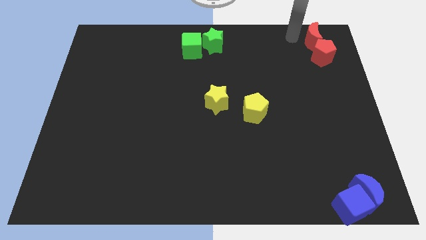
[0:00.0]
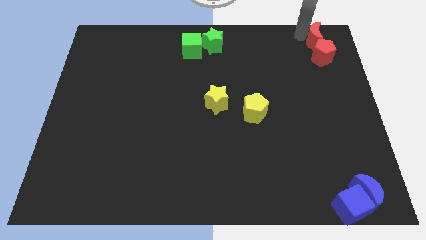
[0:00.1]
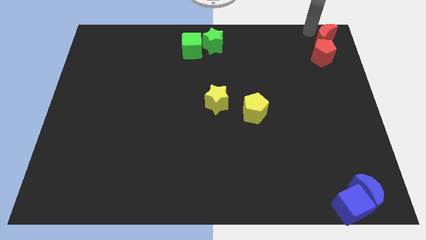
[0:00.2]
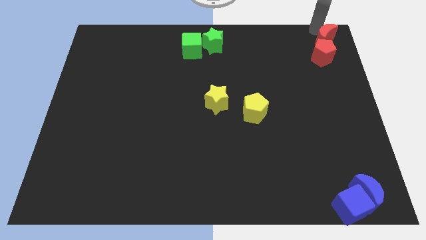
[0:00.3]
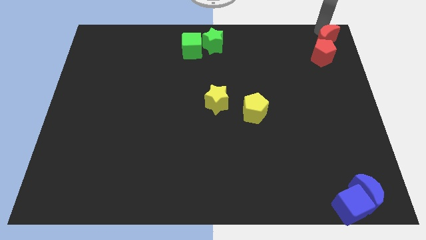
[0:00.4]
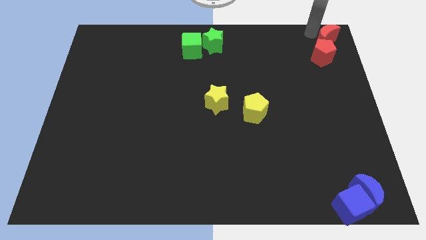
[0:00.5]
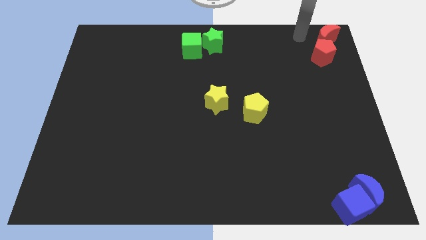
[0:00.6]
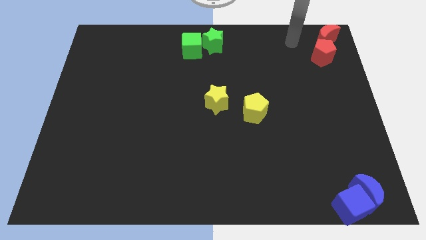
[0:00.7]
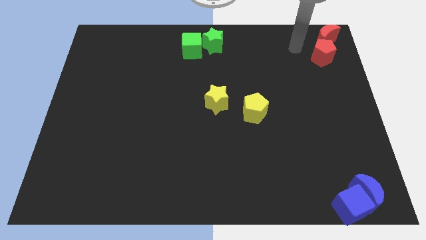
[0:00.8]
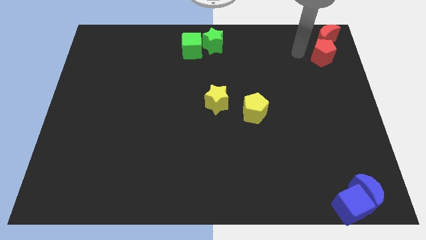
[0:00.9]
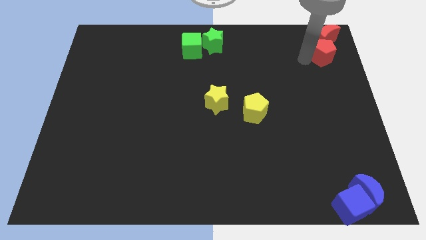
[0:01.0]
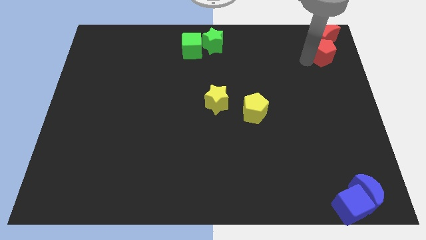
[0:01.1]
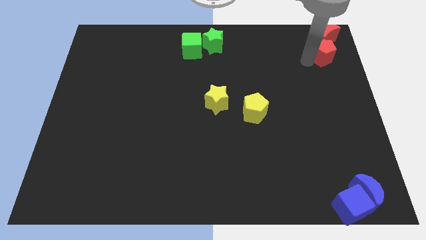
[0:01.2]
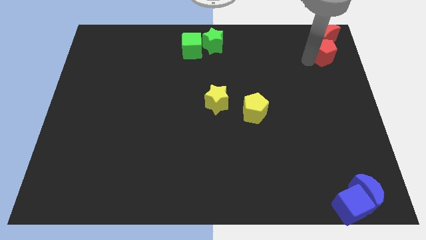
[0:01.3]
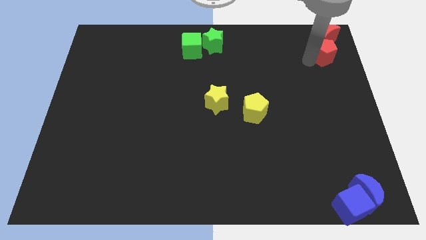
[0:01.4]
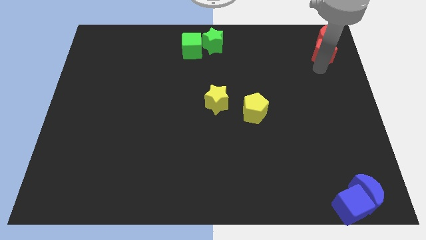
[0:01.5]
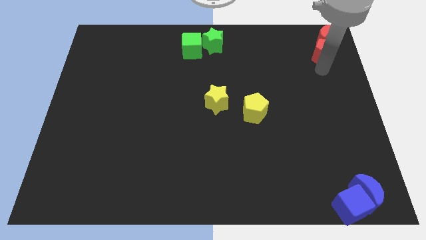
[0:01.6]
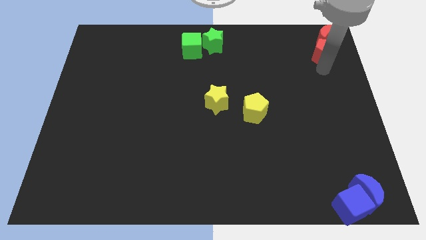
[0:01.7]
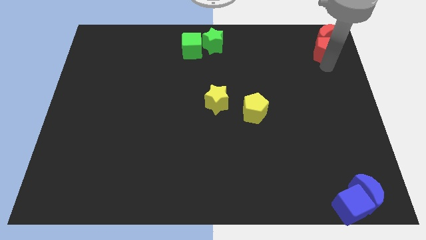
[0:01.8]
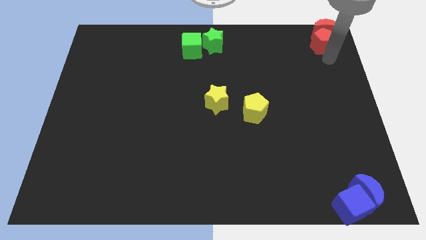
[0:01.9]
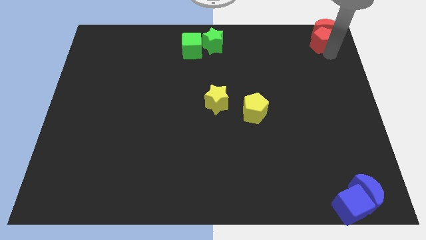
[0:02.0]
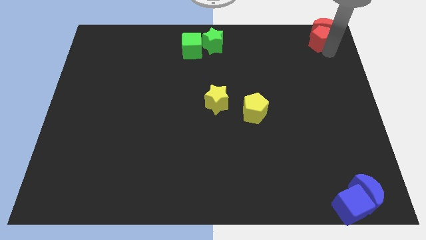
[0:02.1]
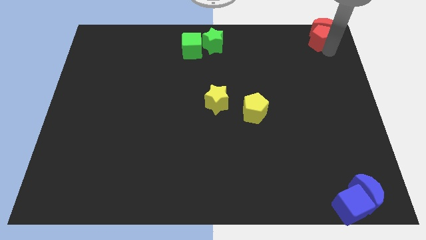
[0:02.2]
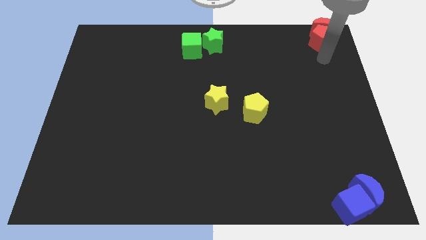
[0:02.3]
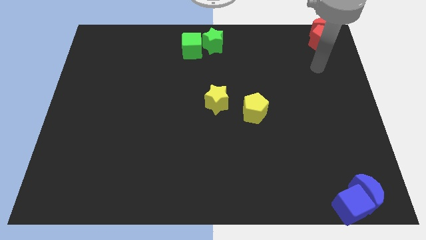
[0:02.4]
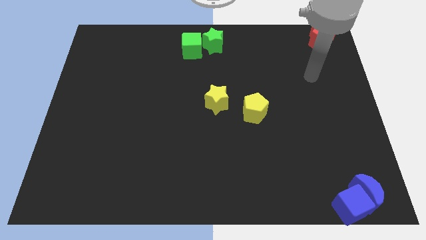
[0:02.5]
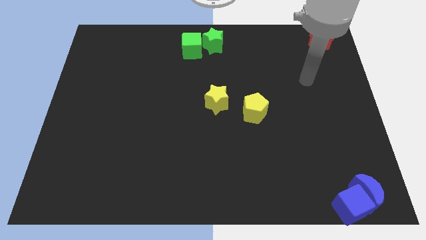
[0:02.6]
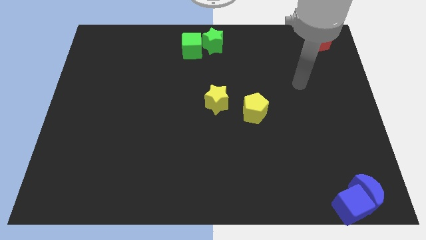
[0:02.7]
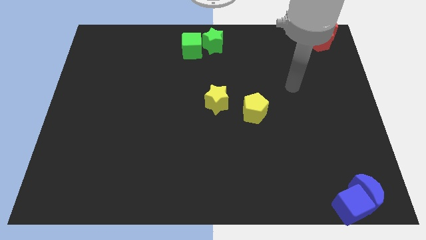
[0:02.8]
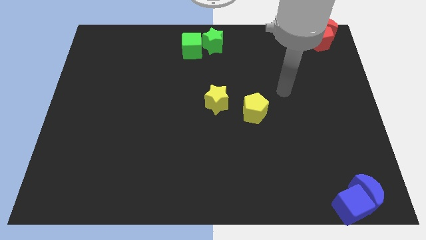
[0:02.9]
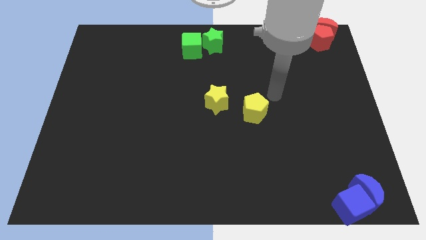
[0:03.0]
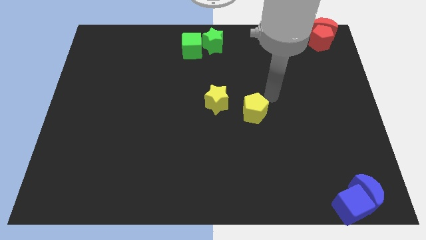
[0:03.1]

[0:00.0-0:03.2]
adjust the red blocks so that they are diagonal to the green blocks

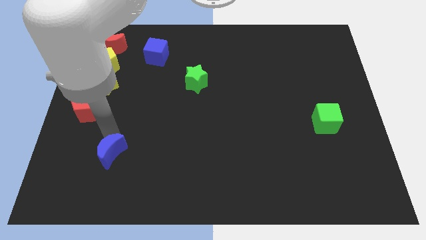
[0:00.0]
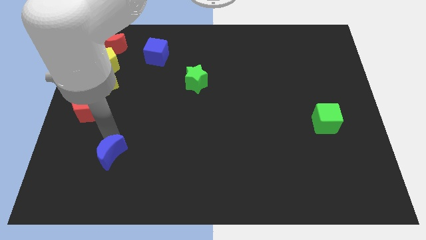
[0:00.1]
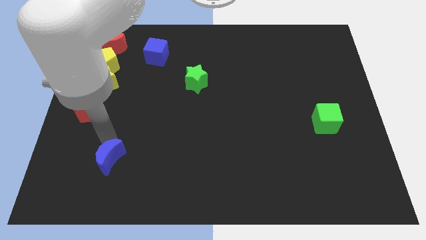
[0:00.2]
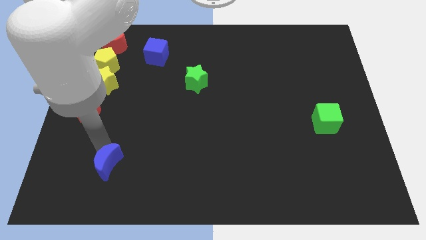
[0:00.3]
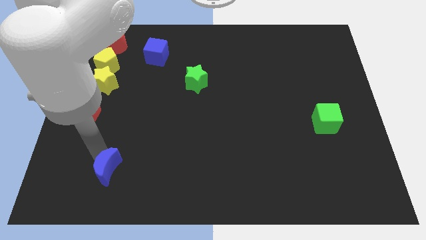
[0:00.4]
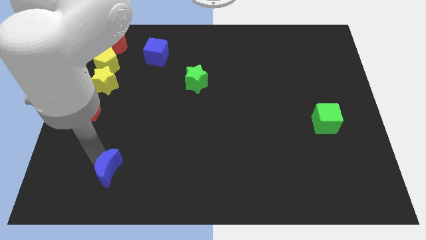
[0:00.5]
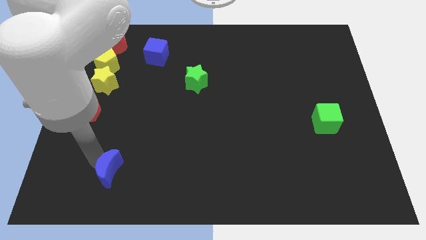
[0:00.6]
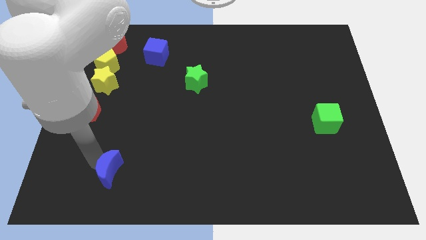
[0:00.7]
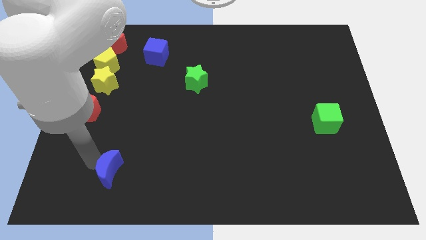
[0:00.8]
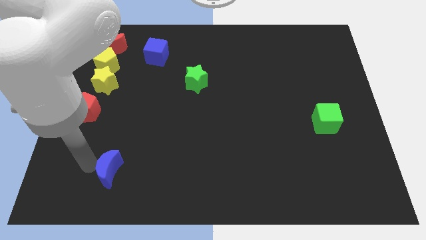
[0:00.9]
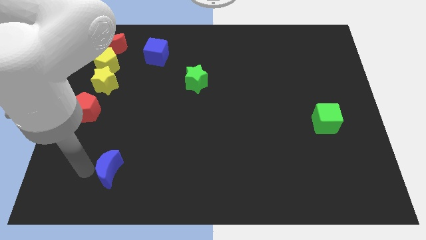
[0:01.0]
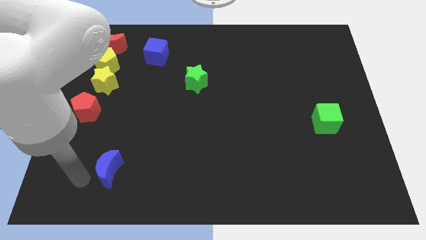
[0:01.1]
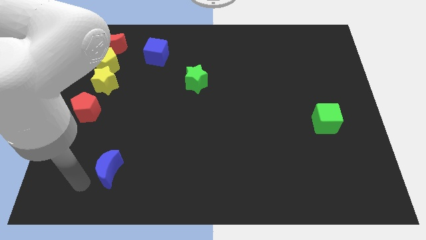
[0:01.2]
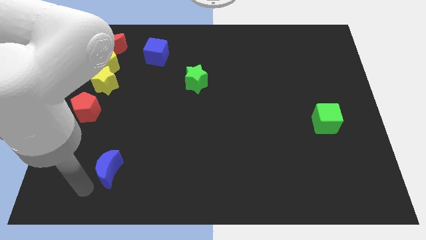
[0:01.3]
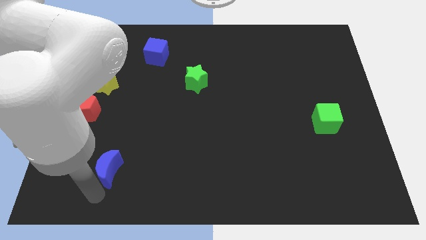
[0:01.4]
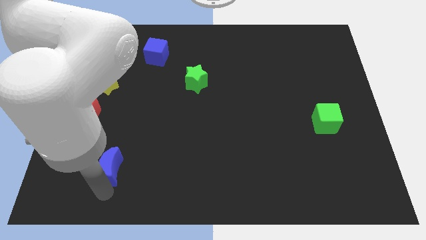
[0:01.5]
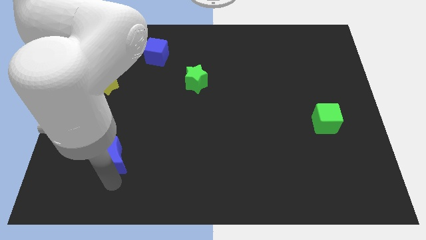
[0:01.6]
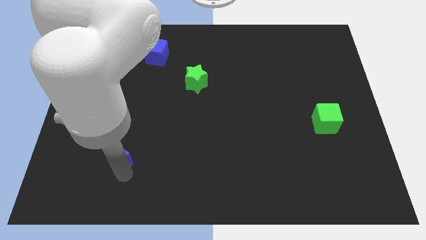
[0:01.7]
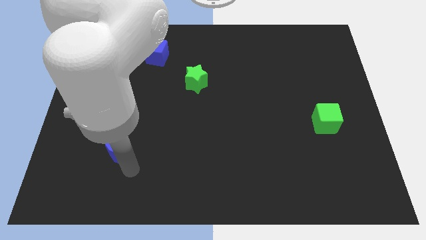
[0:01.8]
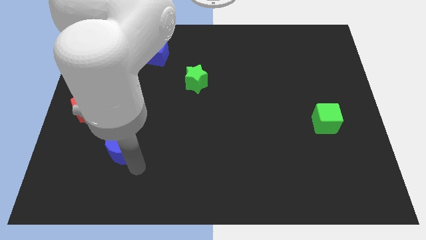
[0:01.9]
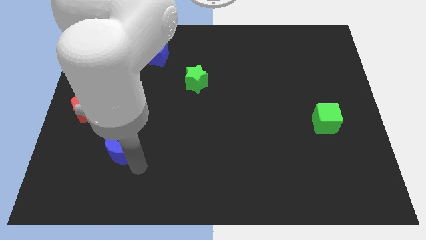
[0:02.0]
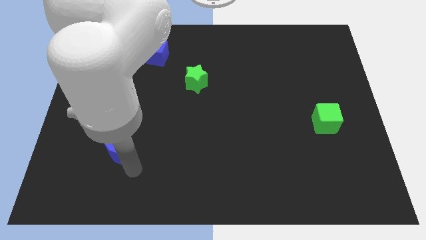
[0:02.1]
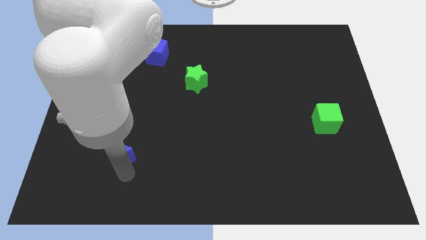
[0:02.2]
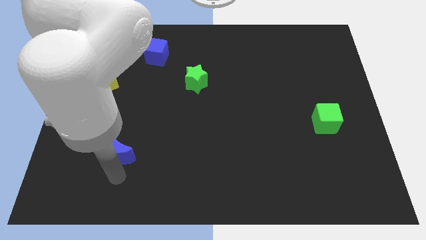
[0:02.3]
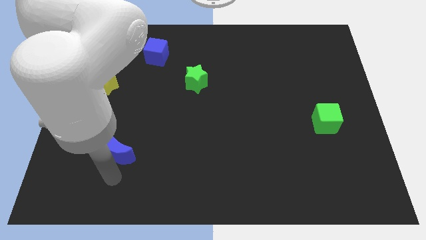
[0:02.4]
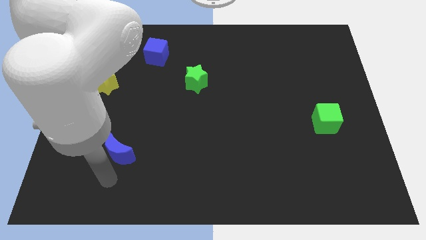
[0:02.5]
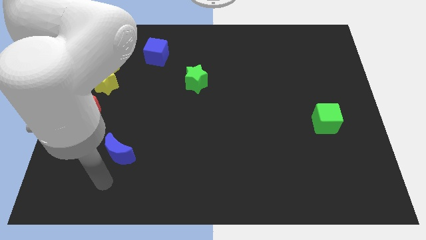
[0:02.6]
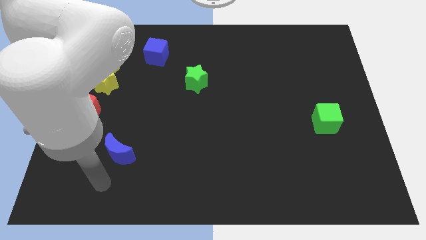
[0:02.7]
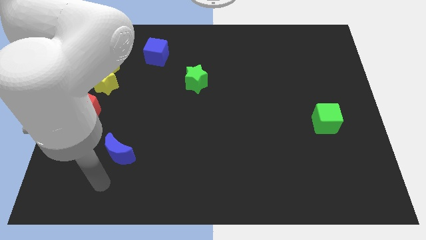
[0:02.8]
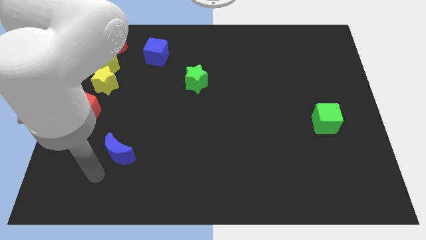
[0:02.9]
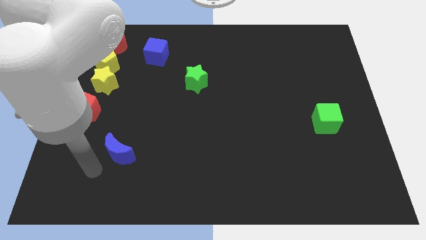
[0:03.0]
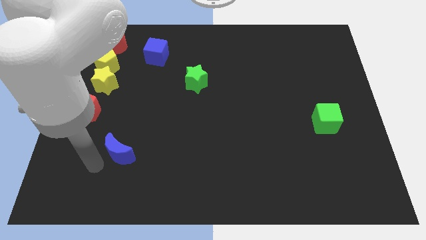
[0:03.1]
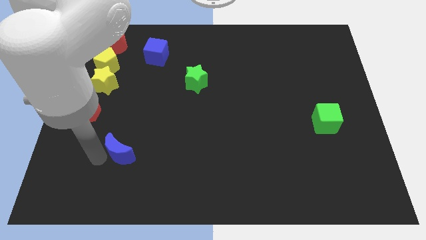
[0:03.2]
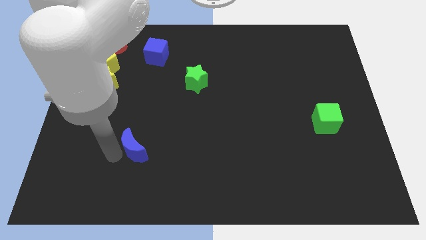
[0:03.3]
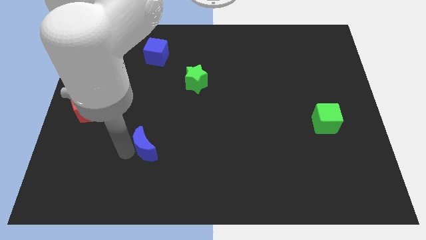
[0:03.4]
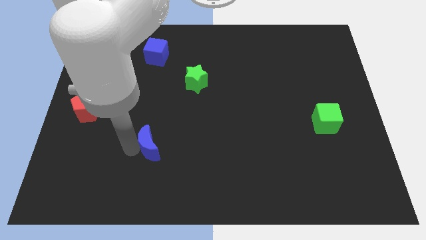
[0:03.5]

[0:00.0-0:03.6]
move the blue crescent below blue cube vertically

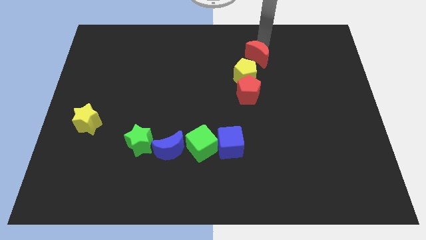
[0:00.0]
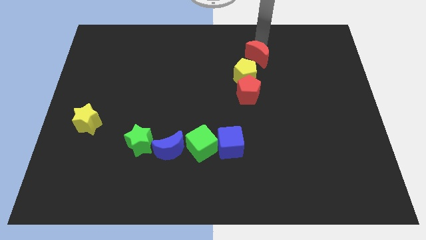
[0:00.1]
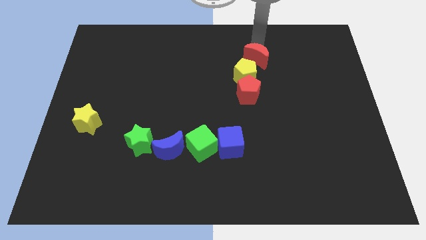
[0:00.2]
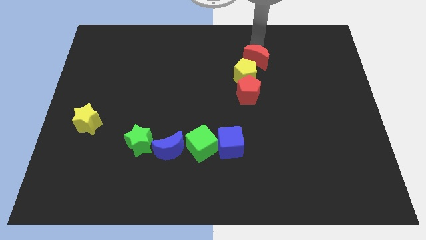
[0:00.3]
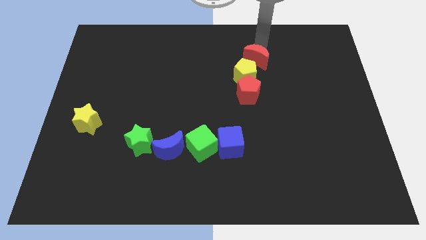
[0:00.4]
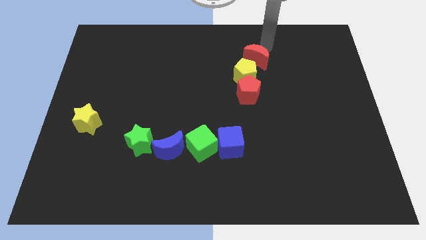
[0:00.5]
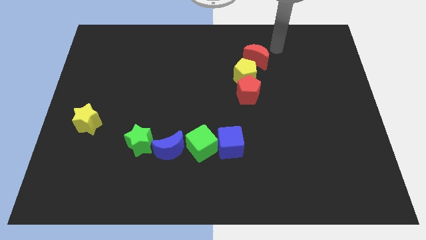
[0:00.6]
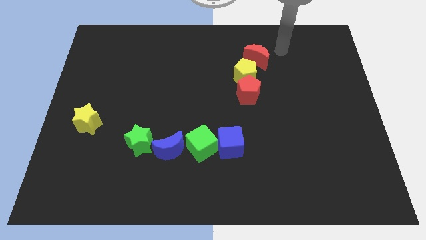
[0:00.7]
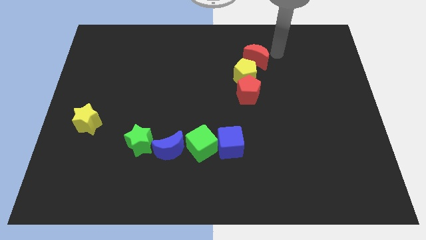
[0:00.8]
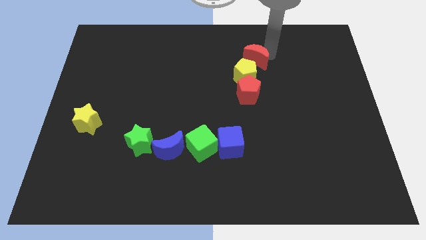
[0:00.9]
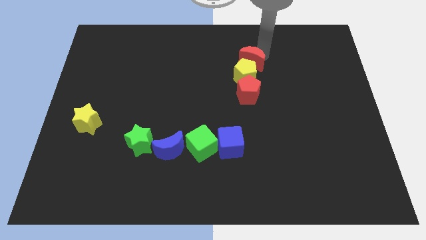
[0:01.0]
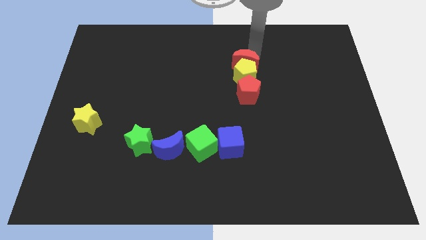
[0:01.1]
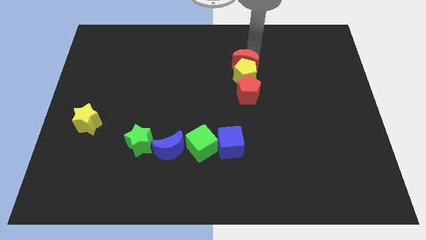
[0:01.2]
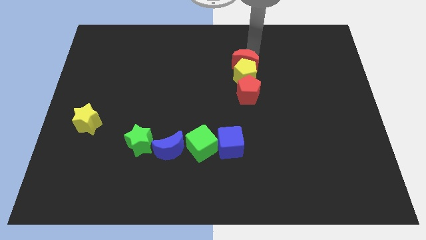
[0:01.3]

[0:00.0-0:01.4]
move red moon into yellow pentagon

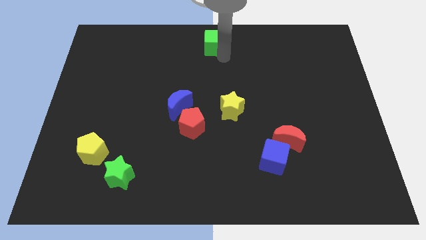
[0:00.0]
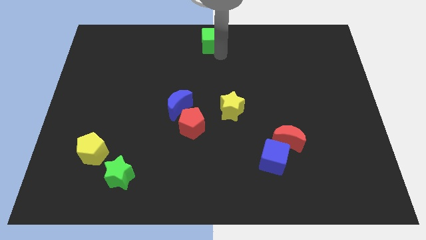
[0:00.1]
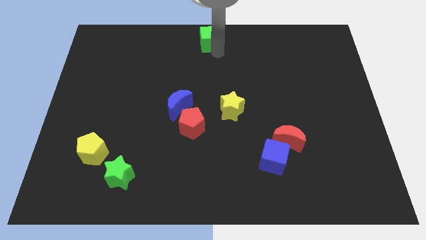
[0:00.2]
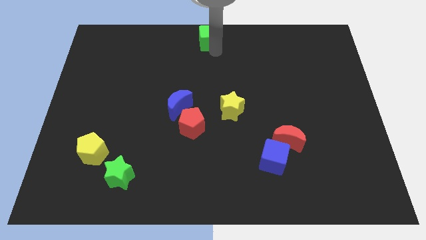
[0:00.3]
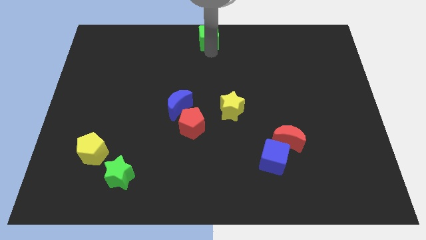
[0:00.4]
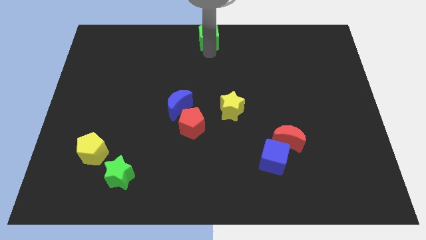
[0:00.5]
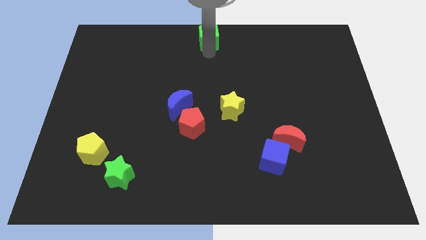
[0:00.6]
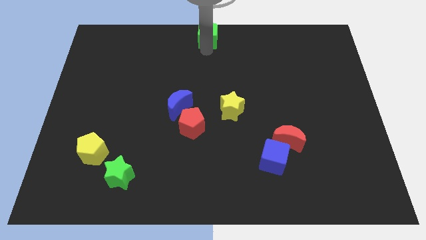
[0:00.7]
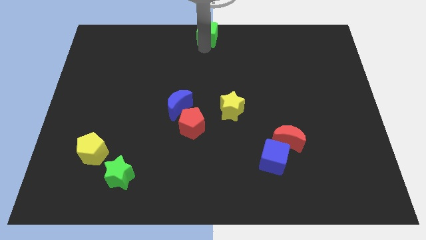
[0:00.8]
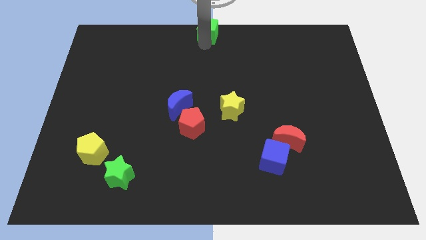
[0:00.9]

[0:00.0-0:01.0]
push the green cube to the top center of the board
